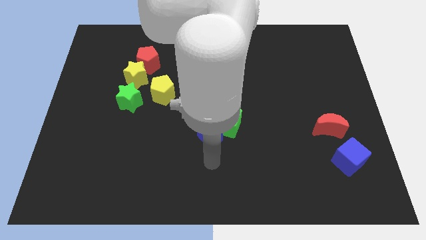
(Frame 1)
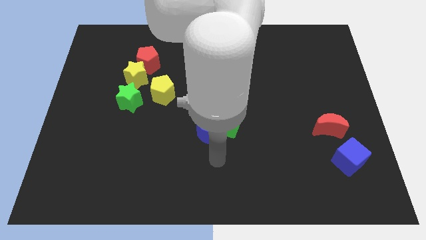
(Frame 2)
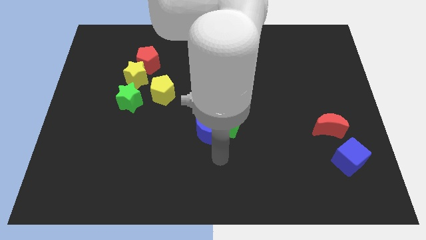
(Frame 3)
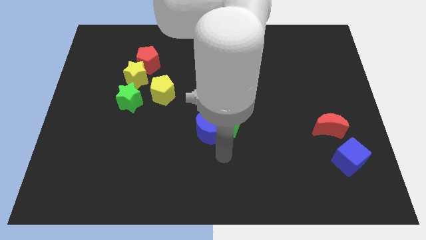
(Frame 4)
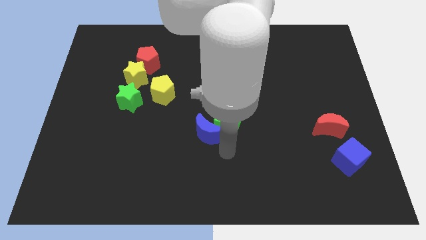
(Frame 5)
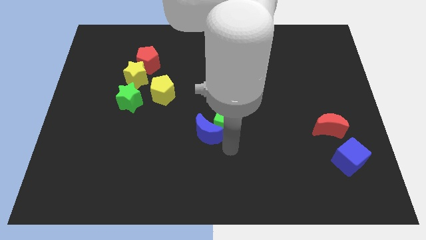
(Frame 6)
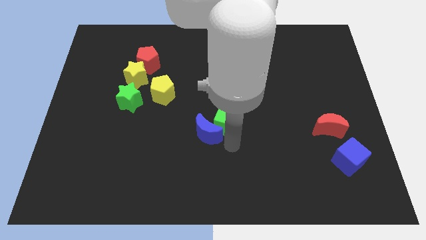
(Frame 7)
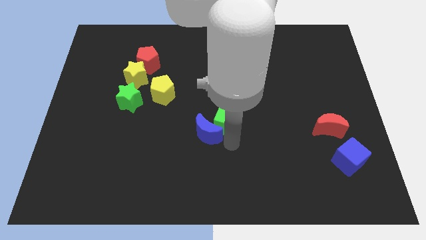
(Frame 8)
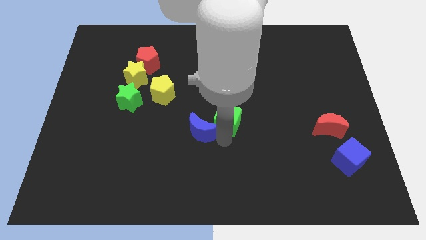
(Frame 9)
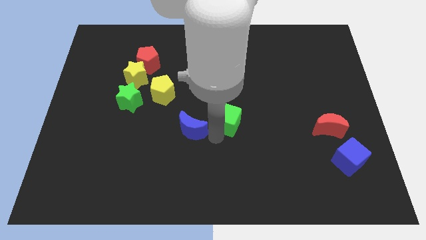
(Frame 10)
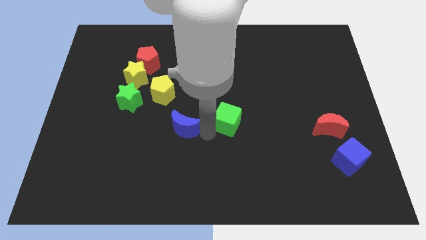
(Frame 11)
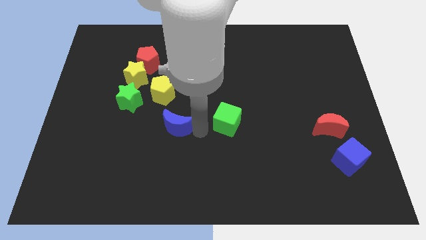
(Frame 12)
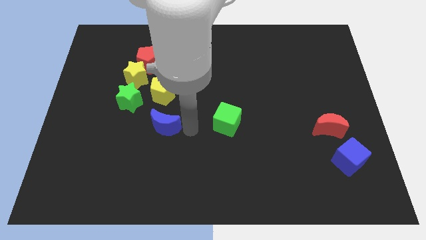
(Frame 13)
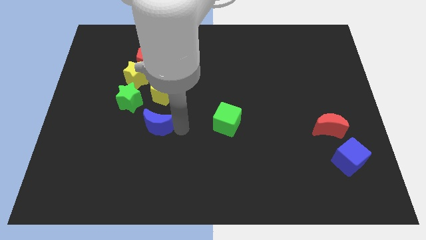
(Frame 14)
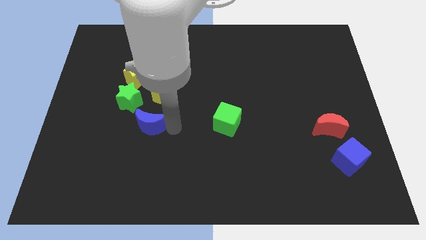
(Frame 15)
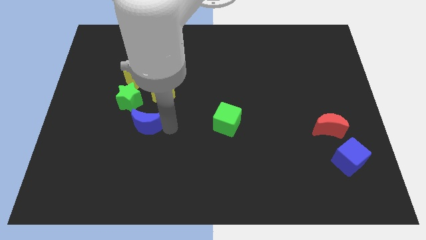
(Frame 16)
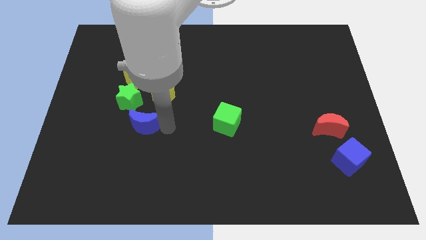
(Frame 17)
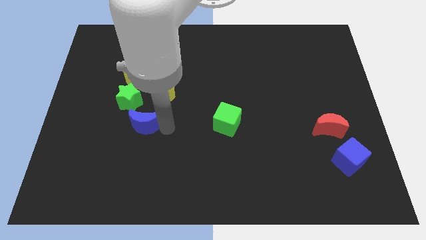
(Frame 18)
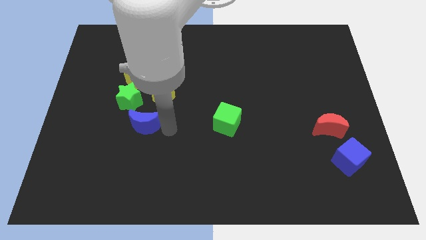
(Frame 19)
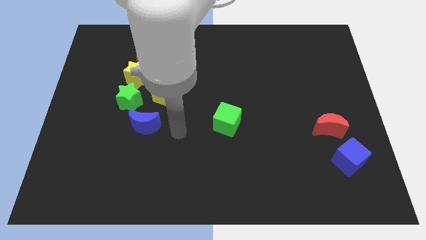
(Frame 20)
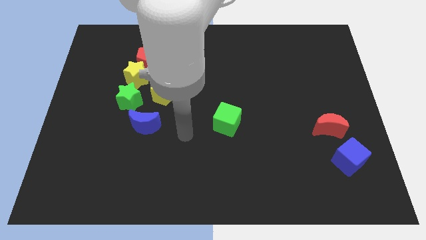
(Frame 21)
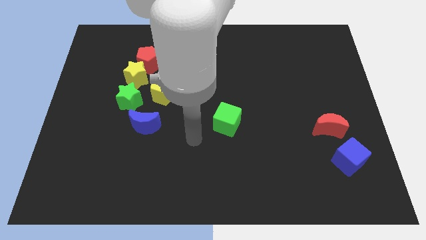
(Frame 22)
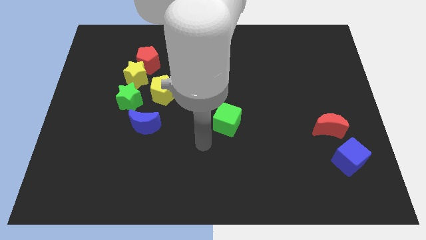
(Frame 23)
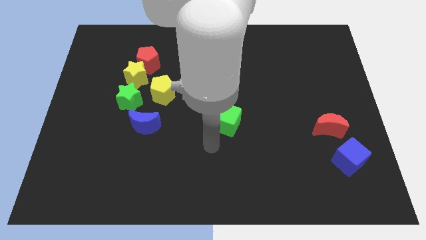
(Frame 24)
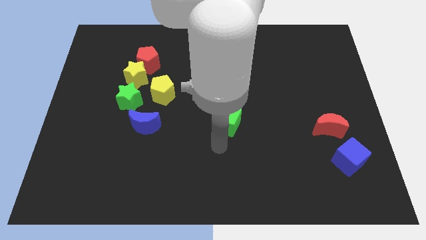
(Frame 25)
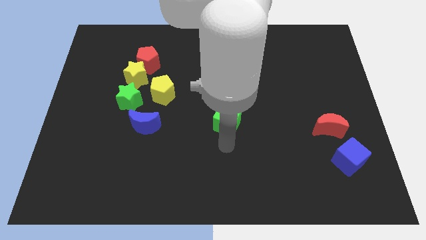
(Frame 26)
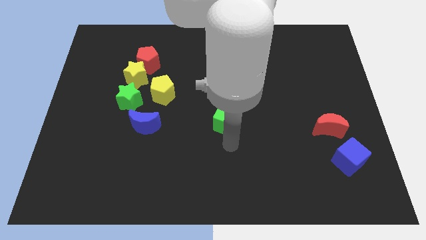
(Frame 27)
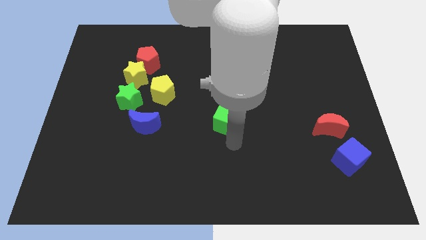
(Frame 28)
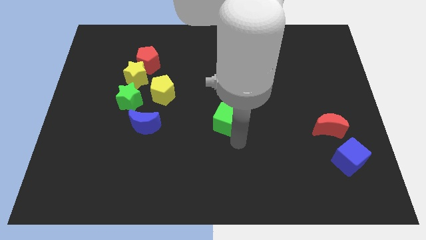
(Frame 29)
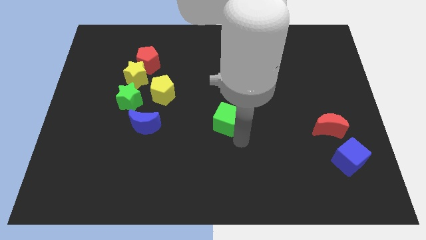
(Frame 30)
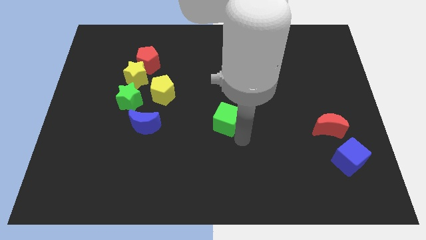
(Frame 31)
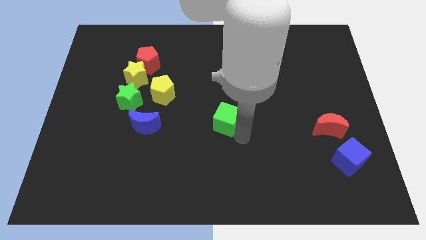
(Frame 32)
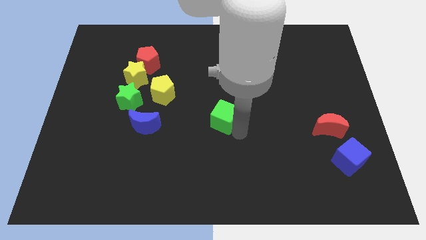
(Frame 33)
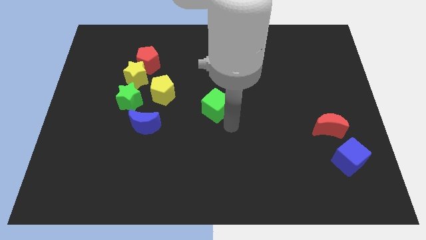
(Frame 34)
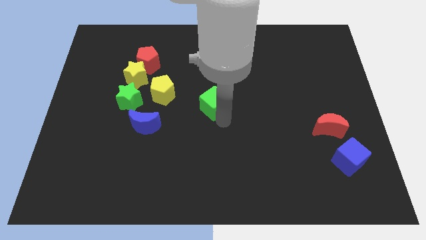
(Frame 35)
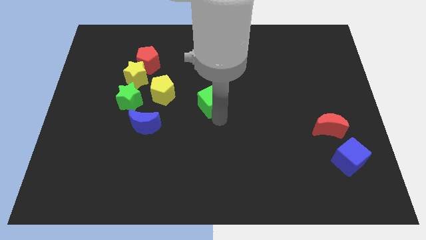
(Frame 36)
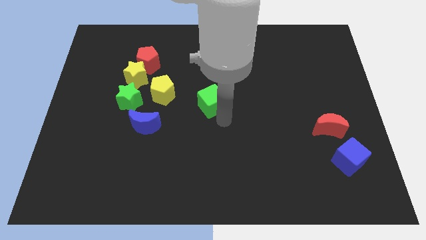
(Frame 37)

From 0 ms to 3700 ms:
move the blue crescent to the bottom right side of the green star

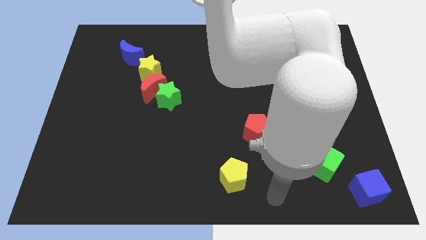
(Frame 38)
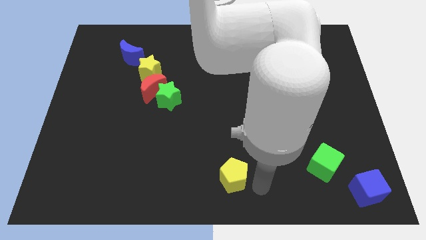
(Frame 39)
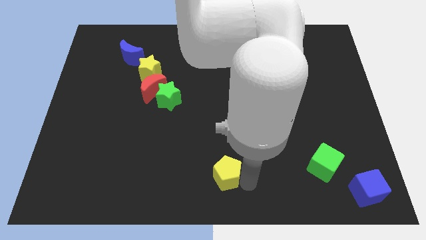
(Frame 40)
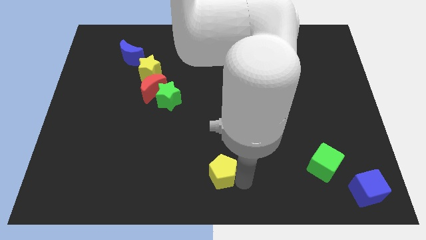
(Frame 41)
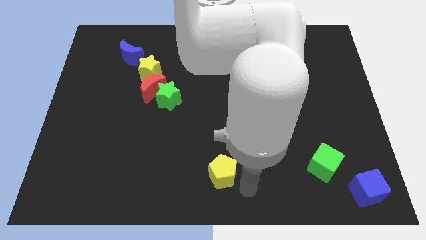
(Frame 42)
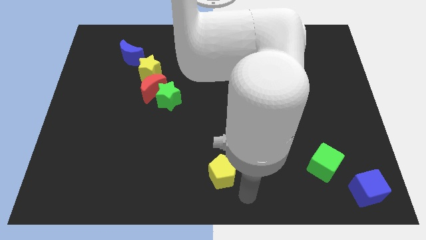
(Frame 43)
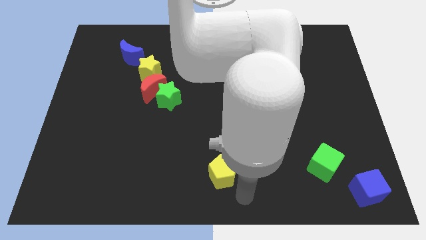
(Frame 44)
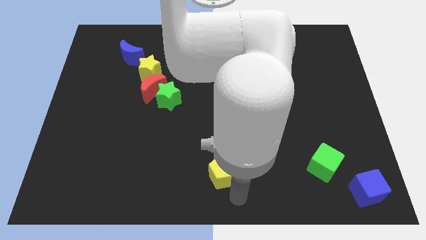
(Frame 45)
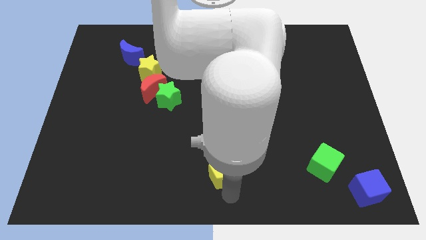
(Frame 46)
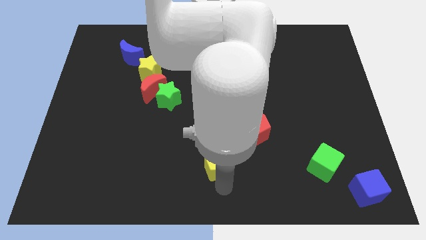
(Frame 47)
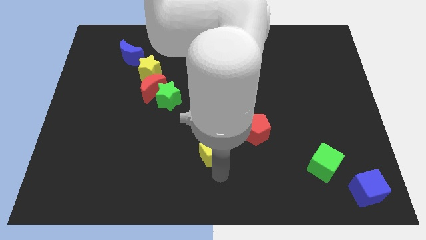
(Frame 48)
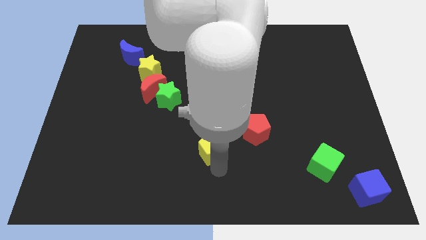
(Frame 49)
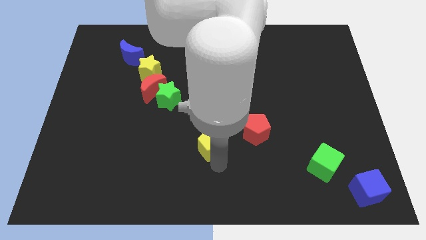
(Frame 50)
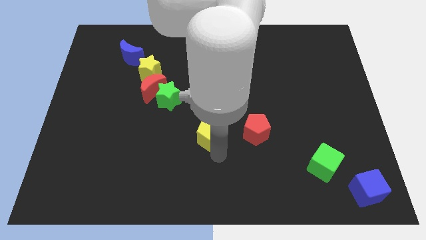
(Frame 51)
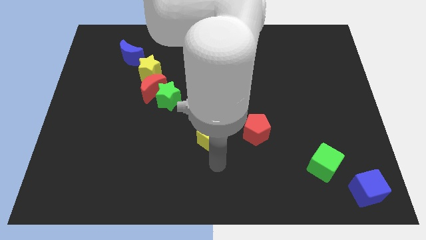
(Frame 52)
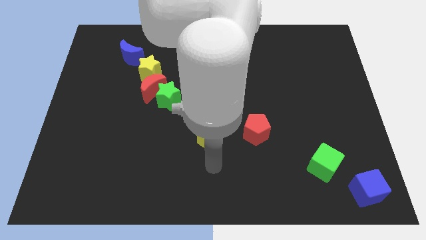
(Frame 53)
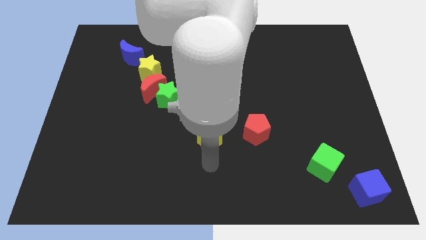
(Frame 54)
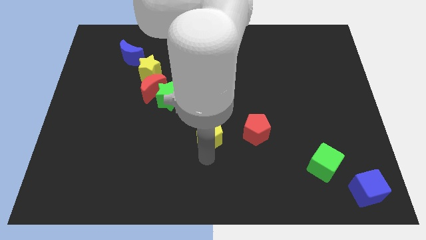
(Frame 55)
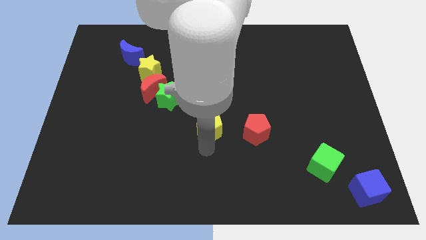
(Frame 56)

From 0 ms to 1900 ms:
put the yellow pentagon left to the red pentagon

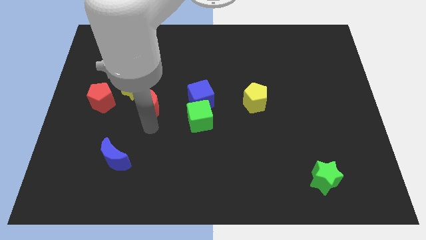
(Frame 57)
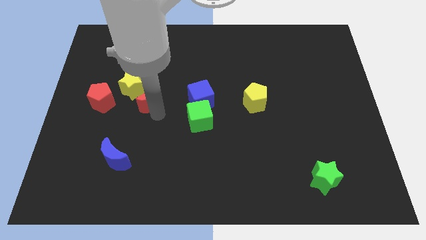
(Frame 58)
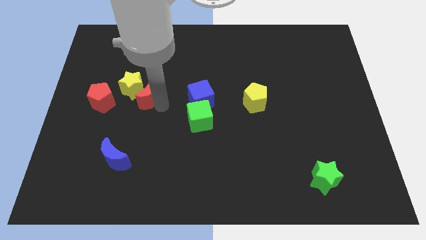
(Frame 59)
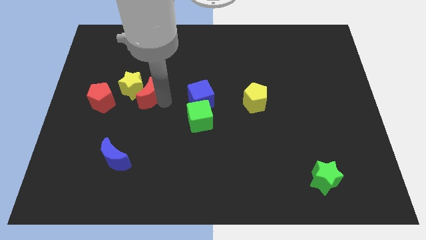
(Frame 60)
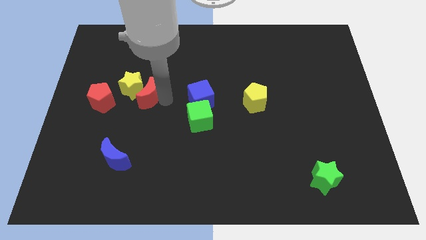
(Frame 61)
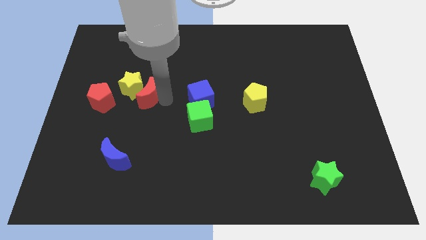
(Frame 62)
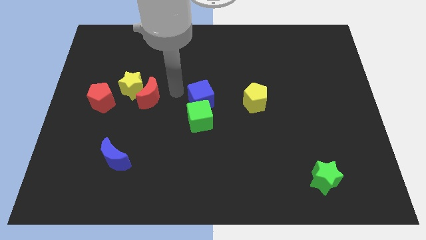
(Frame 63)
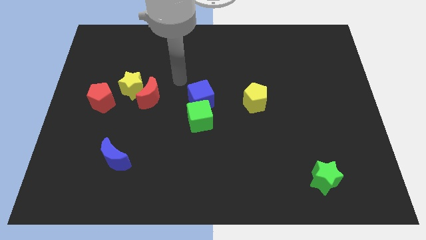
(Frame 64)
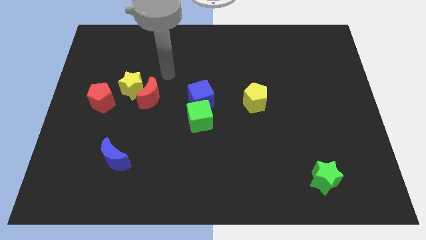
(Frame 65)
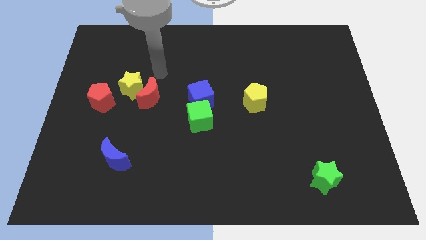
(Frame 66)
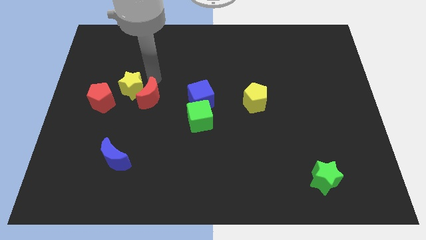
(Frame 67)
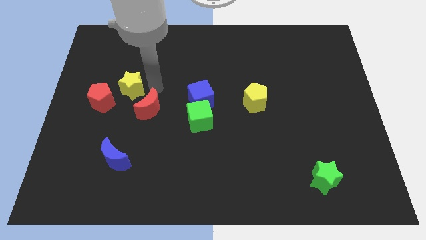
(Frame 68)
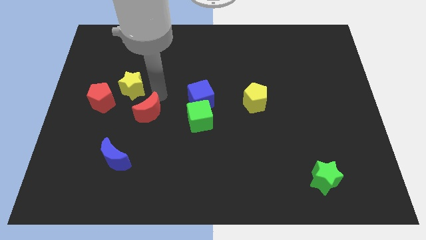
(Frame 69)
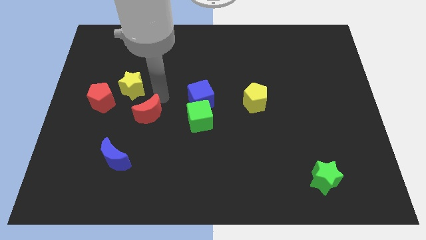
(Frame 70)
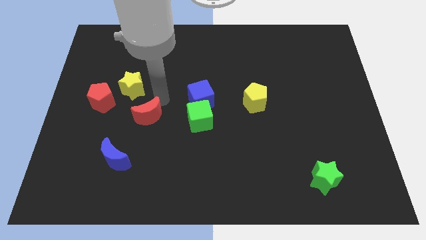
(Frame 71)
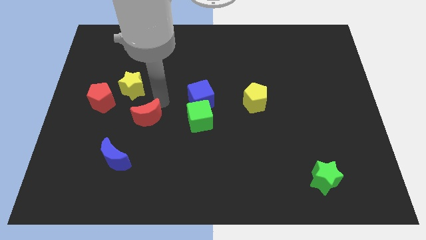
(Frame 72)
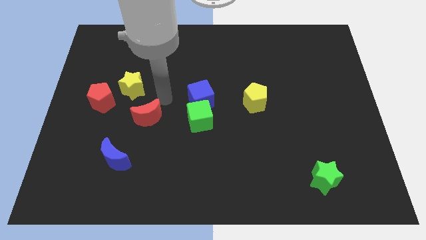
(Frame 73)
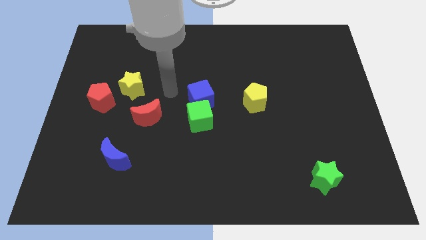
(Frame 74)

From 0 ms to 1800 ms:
adjust the red moon between green cube and red pentagon

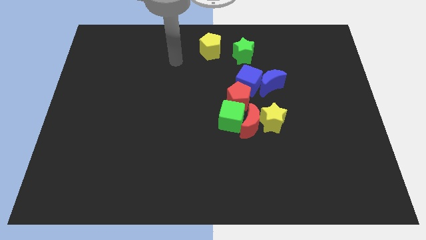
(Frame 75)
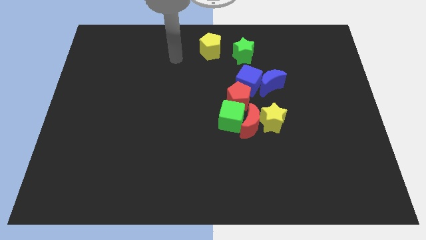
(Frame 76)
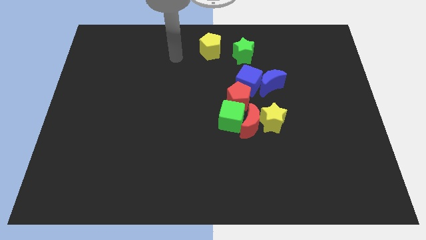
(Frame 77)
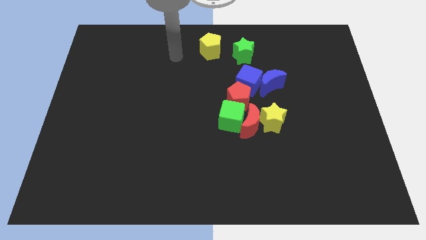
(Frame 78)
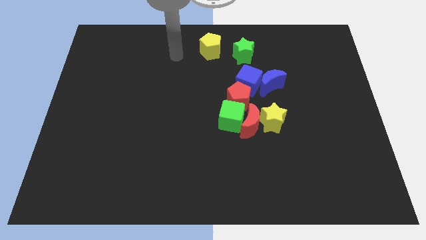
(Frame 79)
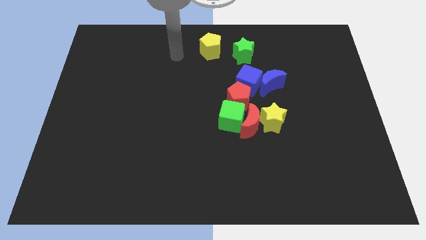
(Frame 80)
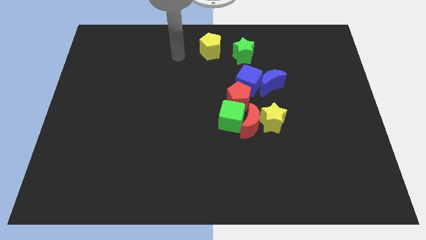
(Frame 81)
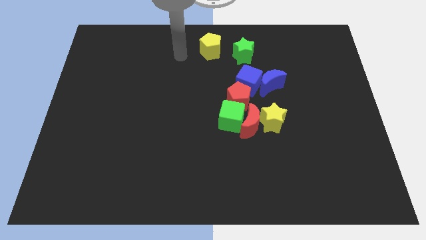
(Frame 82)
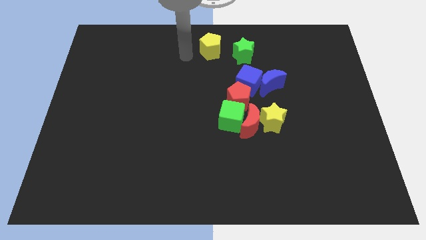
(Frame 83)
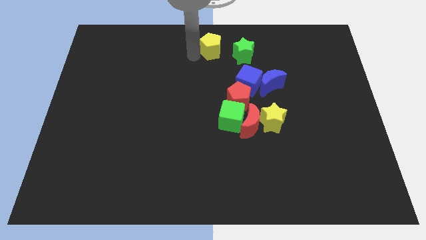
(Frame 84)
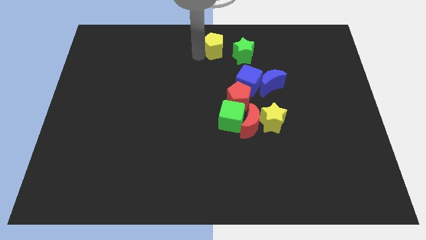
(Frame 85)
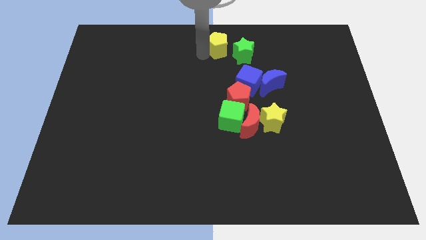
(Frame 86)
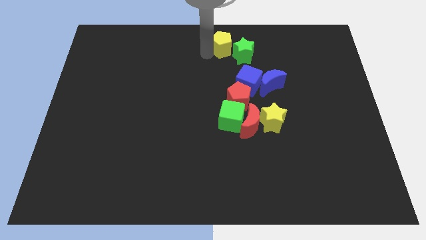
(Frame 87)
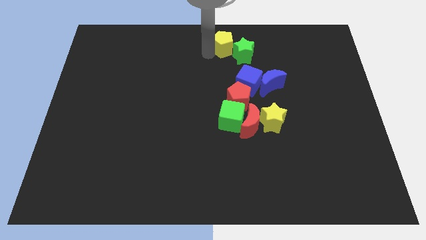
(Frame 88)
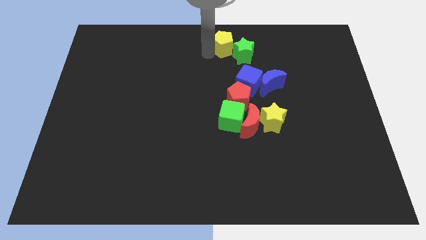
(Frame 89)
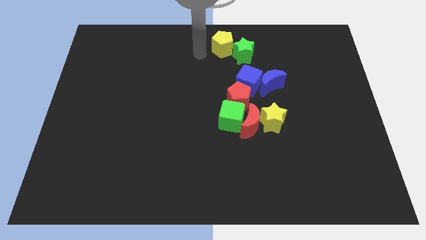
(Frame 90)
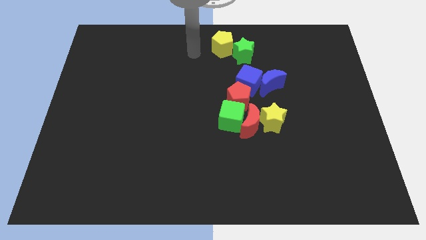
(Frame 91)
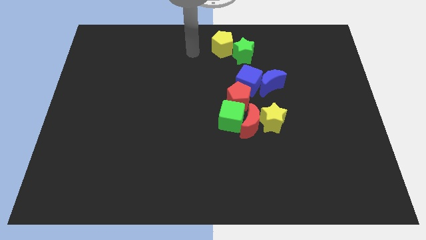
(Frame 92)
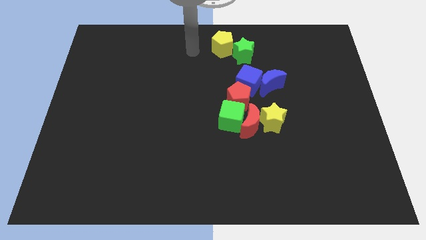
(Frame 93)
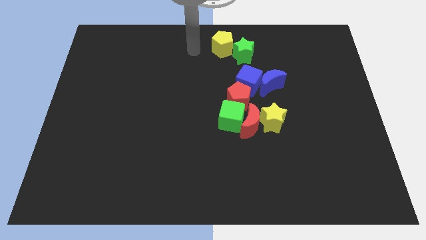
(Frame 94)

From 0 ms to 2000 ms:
push the yellow pentagon towards the top left side of the green star
